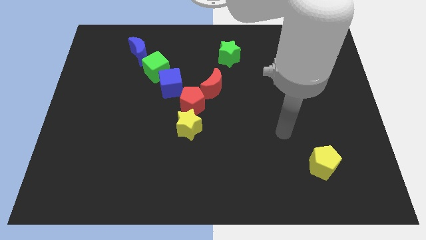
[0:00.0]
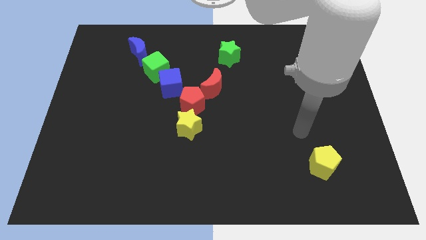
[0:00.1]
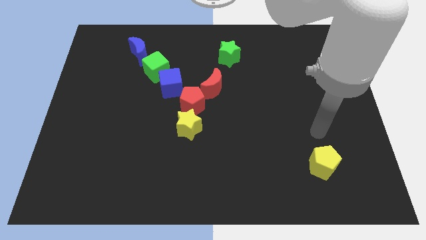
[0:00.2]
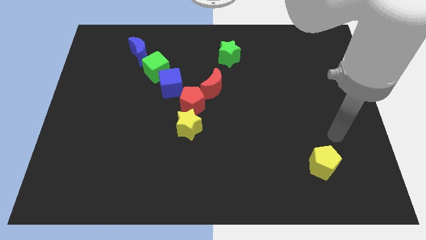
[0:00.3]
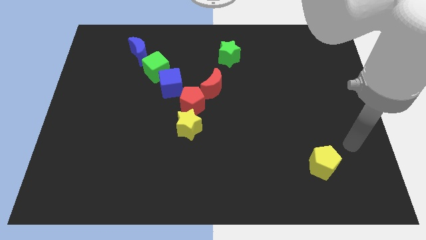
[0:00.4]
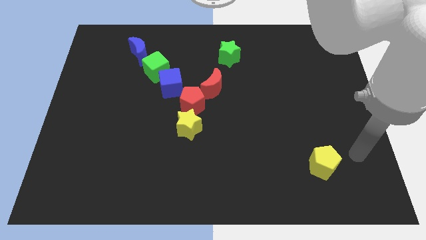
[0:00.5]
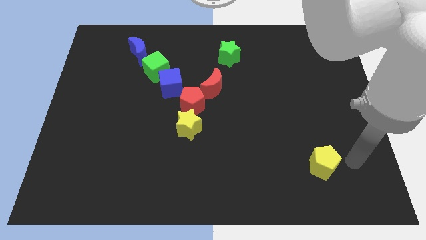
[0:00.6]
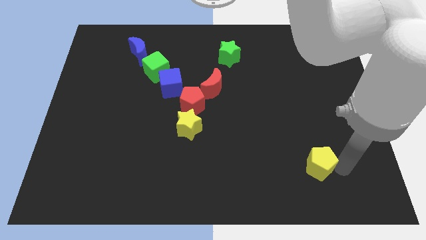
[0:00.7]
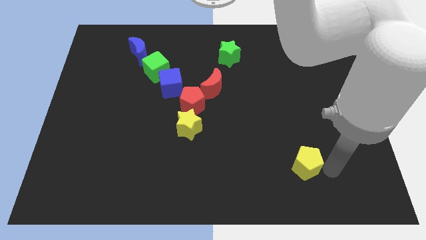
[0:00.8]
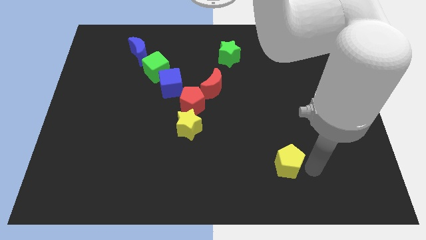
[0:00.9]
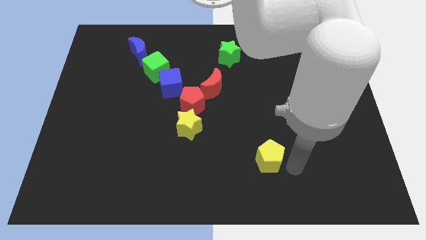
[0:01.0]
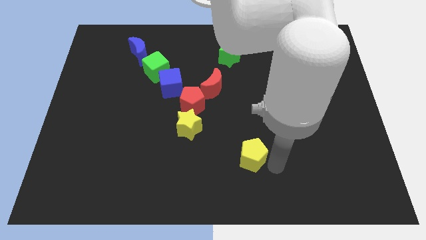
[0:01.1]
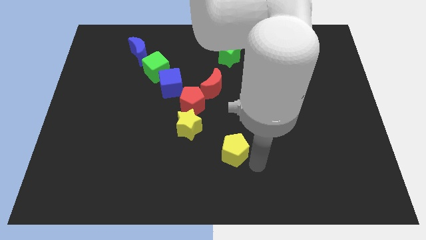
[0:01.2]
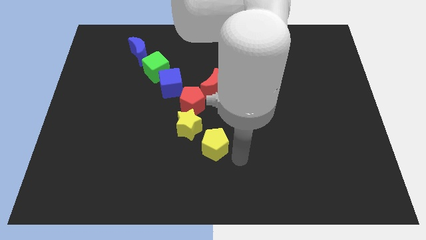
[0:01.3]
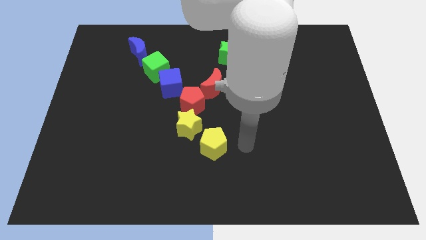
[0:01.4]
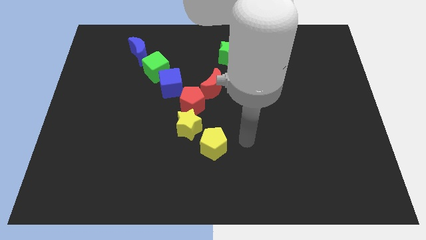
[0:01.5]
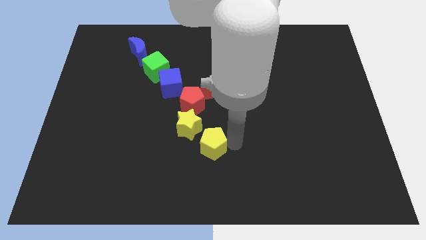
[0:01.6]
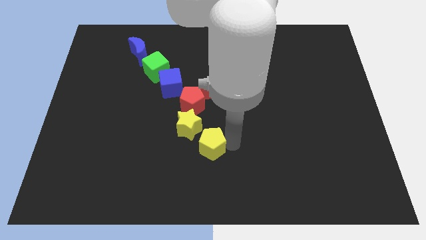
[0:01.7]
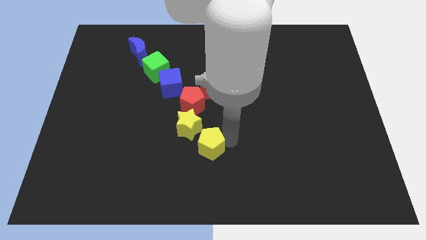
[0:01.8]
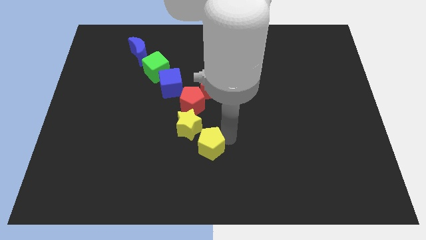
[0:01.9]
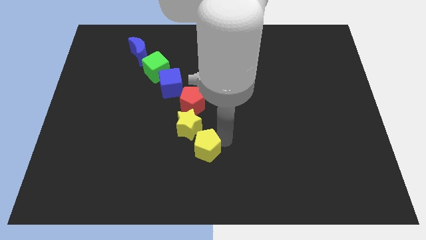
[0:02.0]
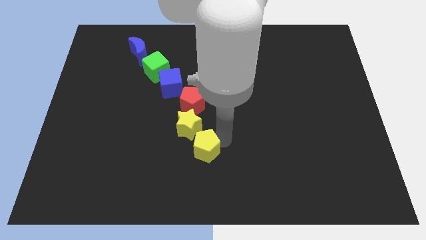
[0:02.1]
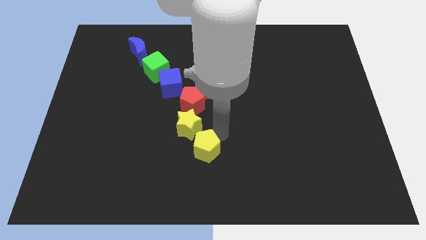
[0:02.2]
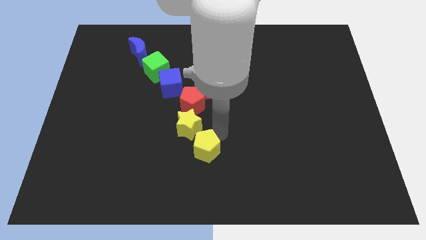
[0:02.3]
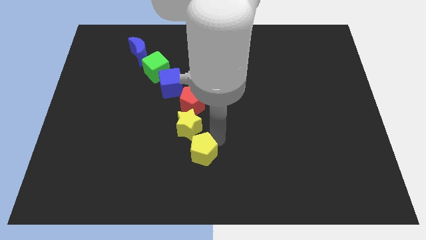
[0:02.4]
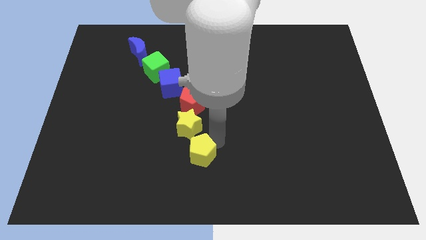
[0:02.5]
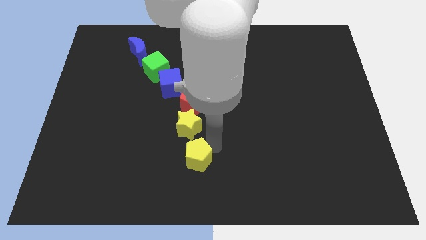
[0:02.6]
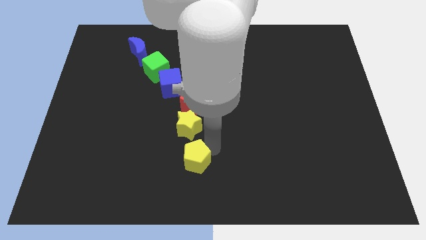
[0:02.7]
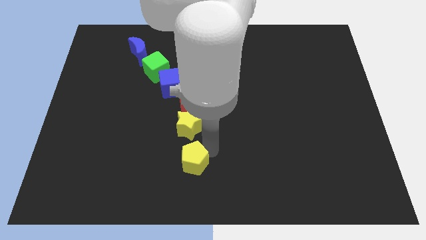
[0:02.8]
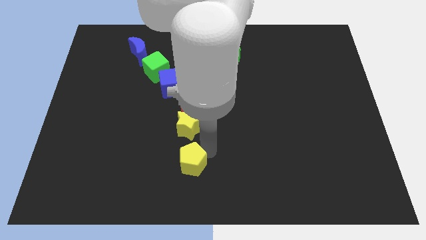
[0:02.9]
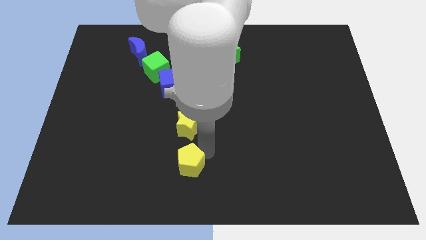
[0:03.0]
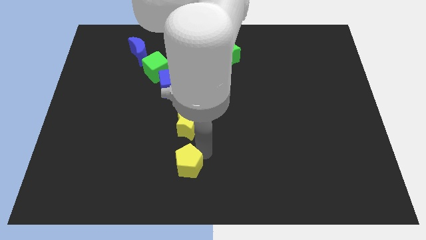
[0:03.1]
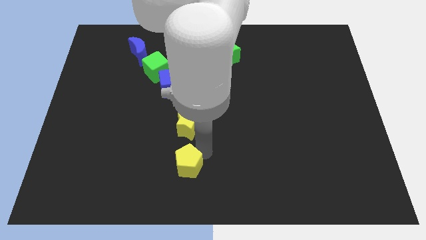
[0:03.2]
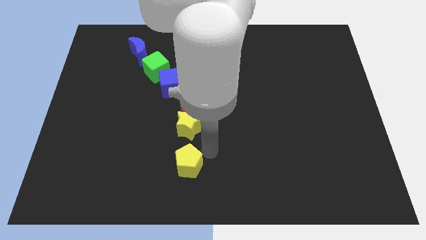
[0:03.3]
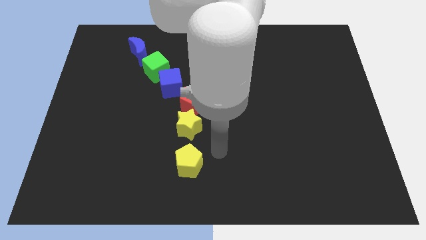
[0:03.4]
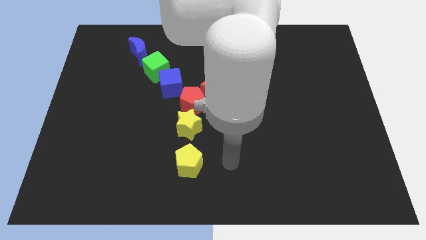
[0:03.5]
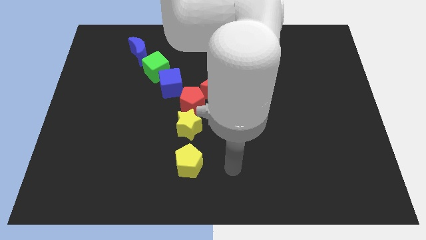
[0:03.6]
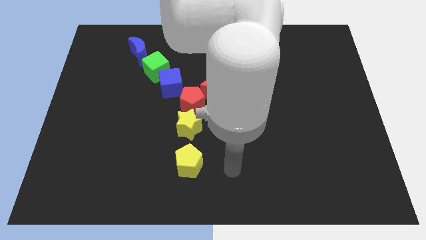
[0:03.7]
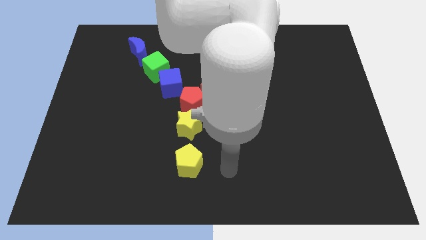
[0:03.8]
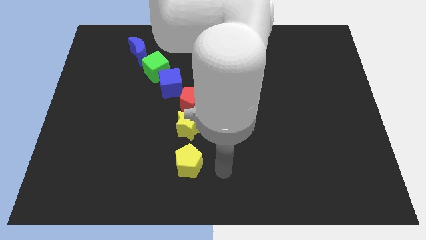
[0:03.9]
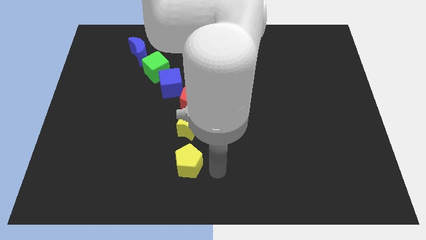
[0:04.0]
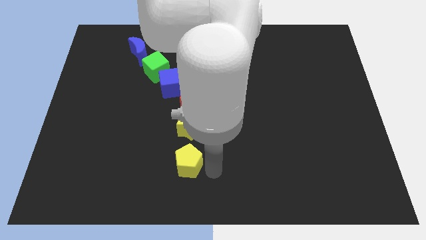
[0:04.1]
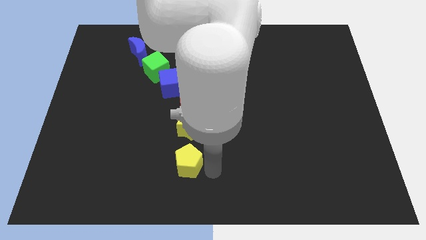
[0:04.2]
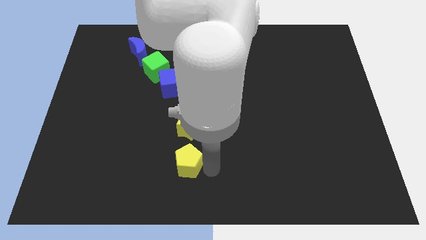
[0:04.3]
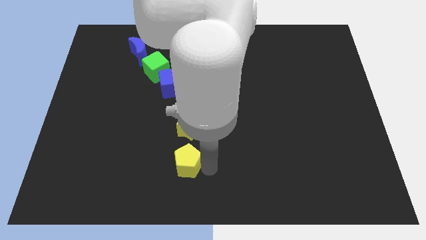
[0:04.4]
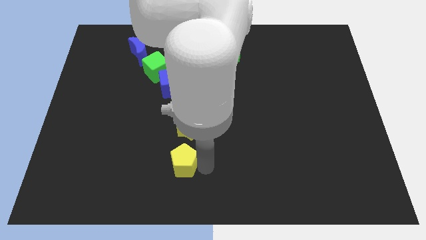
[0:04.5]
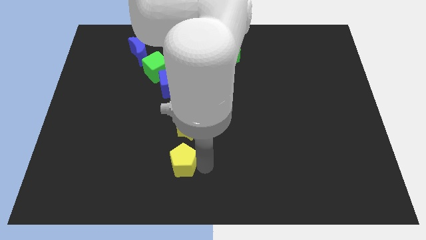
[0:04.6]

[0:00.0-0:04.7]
push the yellow pentagon to the bottom of the yellow star

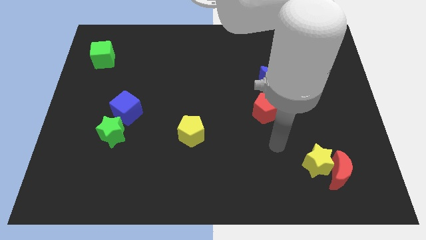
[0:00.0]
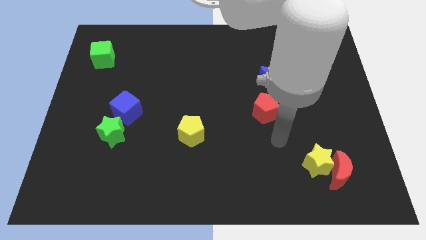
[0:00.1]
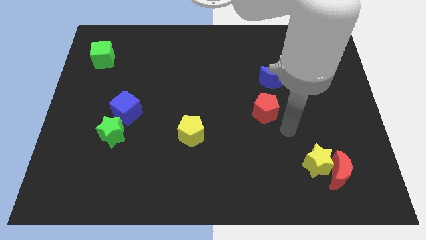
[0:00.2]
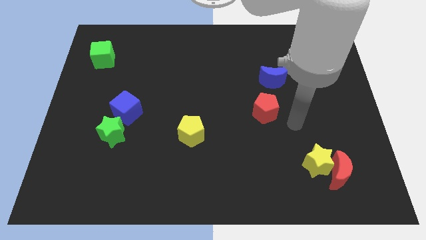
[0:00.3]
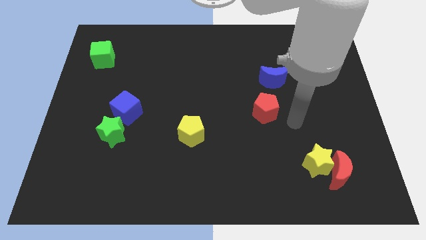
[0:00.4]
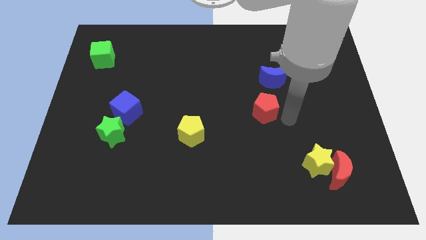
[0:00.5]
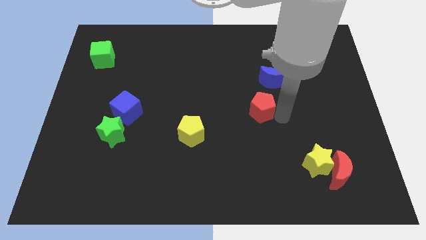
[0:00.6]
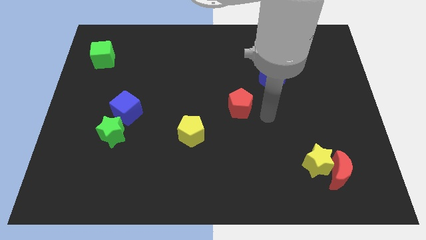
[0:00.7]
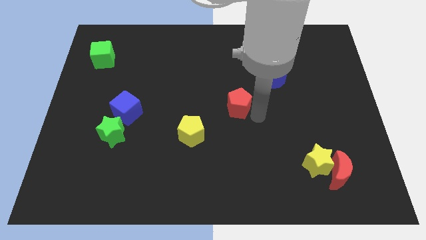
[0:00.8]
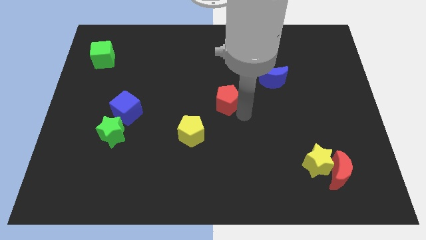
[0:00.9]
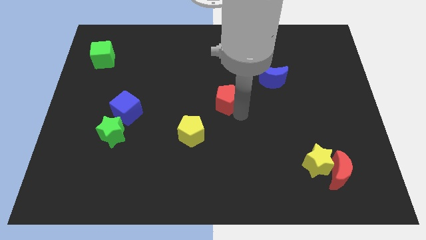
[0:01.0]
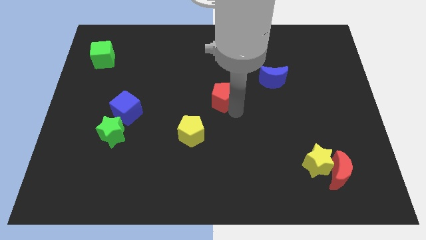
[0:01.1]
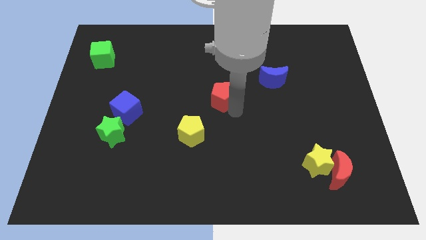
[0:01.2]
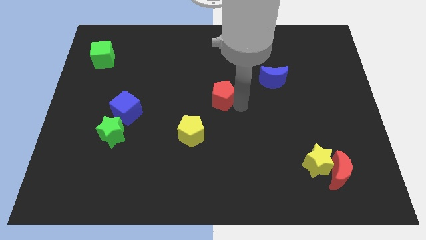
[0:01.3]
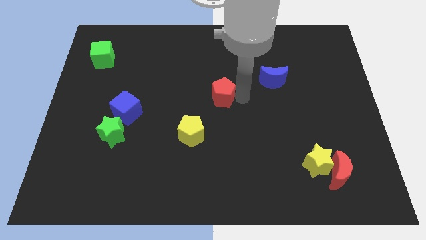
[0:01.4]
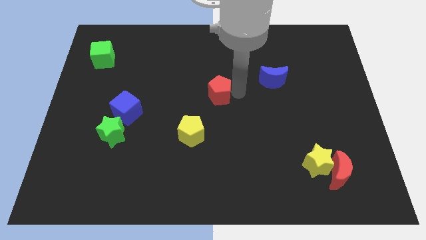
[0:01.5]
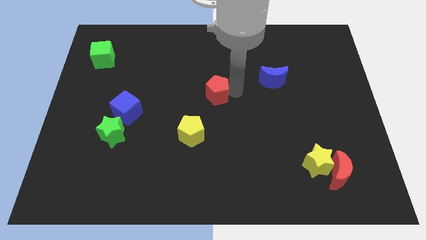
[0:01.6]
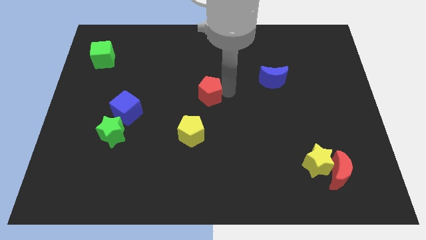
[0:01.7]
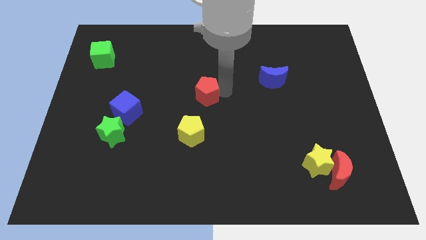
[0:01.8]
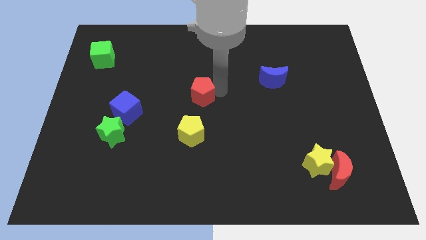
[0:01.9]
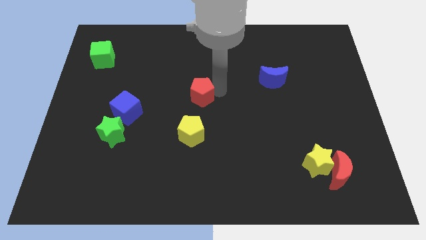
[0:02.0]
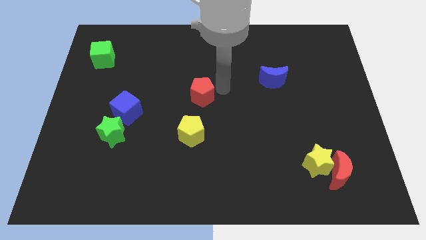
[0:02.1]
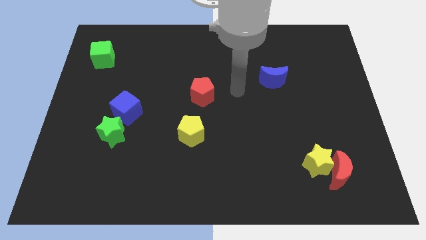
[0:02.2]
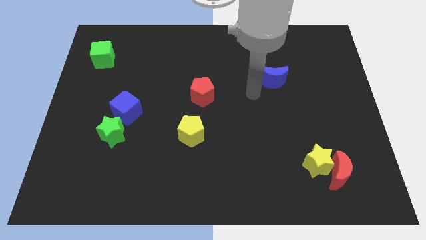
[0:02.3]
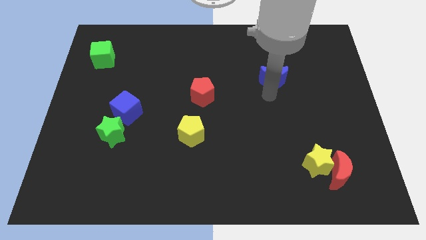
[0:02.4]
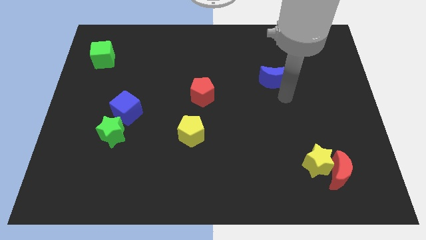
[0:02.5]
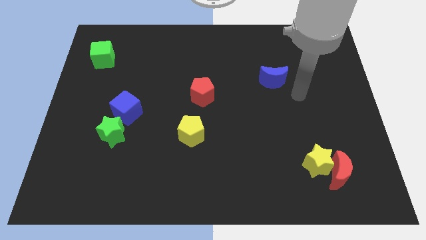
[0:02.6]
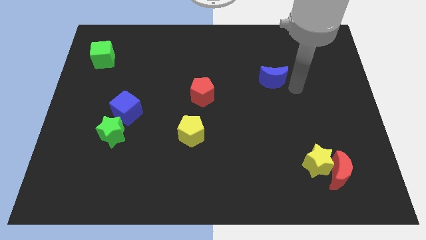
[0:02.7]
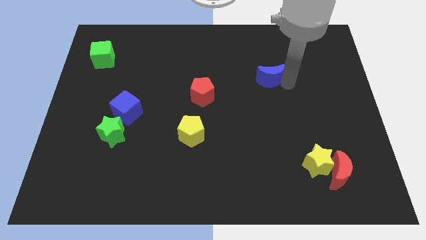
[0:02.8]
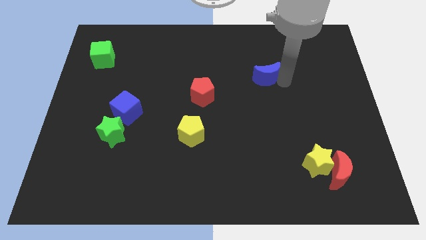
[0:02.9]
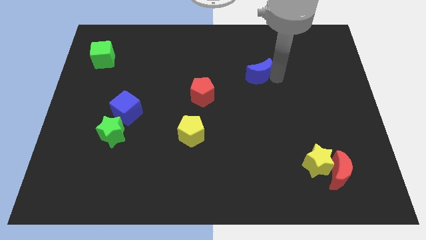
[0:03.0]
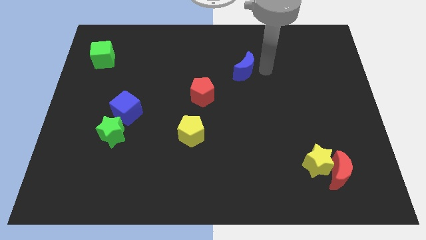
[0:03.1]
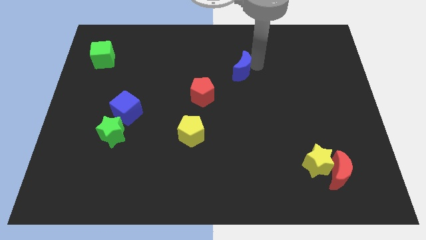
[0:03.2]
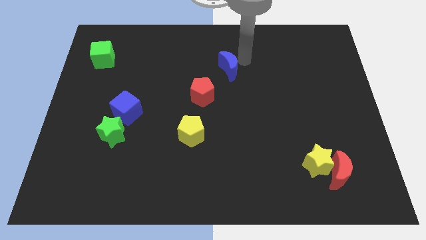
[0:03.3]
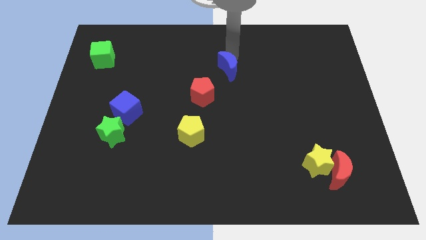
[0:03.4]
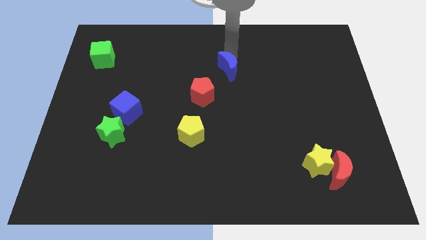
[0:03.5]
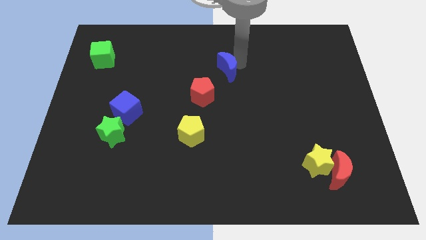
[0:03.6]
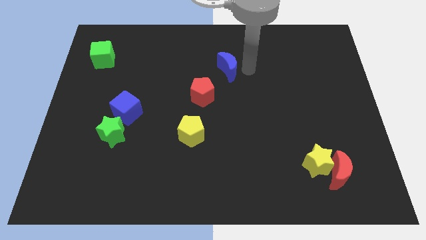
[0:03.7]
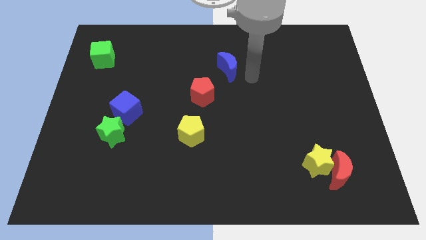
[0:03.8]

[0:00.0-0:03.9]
slide the red pentagon diagonally above the yellow pentagon

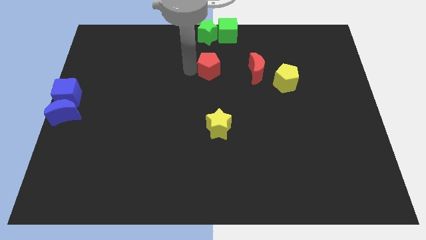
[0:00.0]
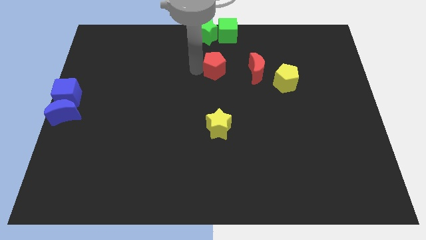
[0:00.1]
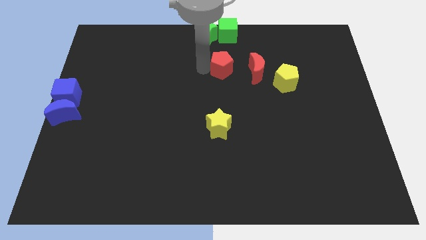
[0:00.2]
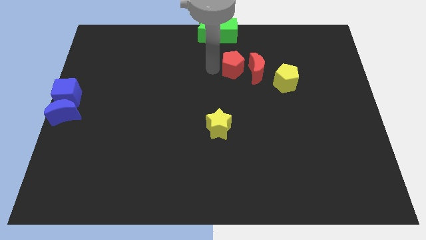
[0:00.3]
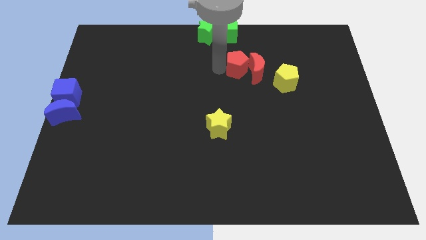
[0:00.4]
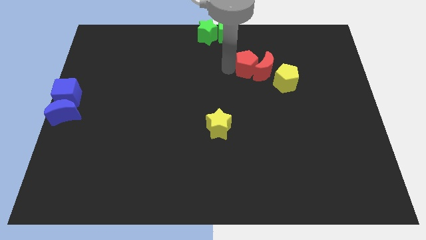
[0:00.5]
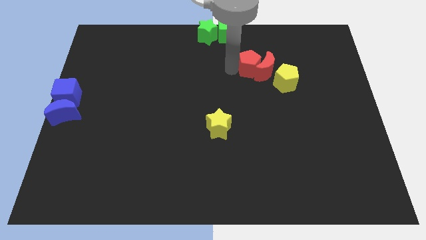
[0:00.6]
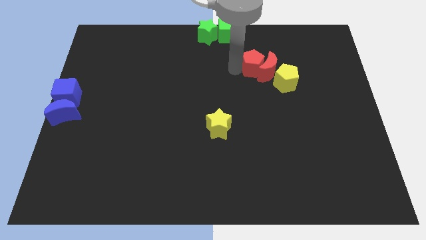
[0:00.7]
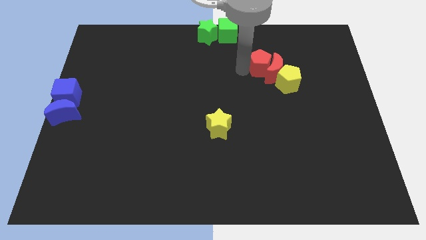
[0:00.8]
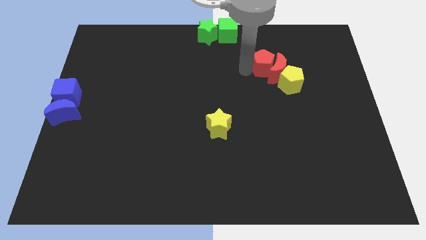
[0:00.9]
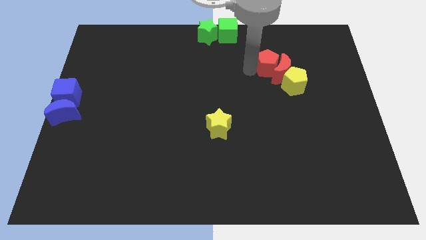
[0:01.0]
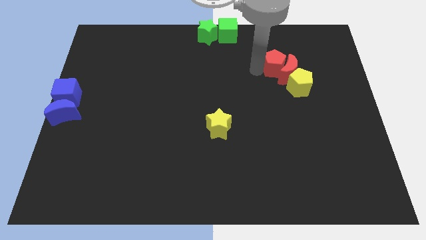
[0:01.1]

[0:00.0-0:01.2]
touch red crescent with red pentagon
